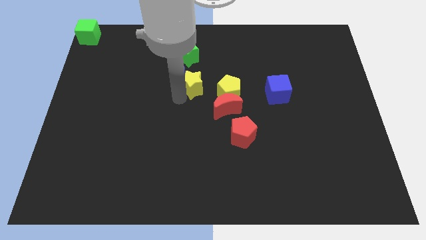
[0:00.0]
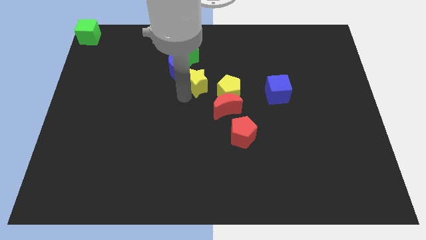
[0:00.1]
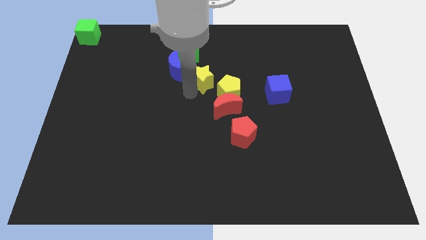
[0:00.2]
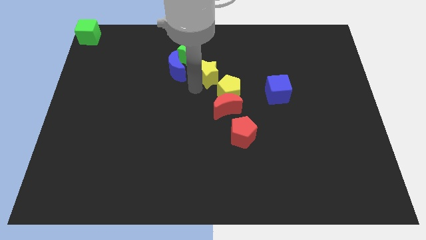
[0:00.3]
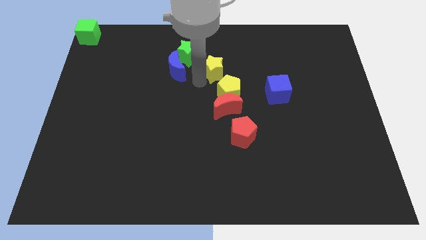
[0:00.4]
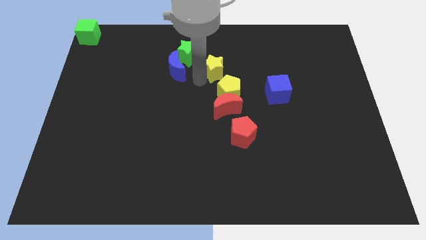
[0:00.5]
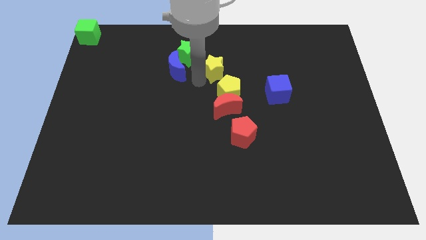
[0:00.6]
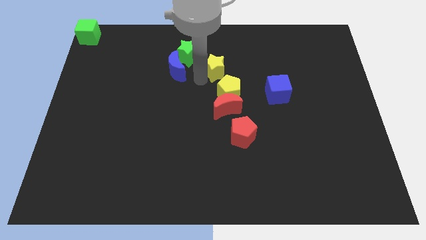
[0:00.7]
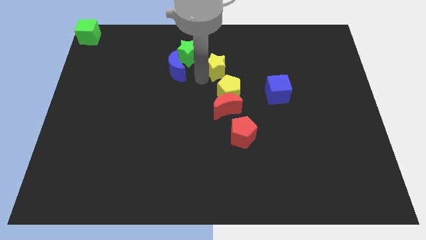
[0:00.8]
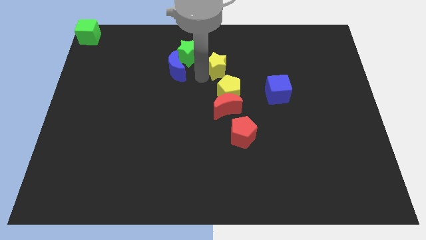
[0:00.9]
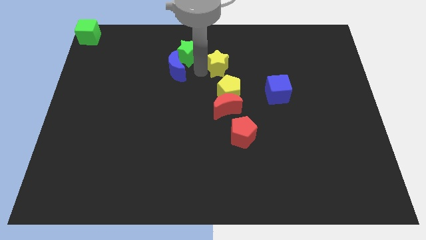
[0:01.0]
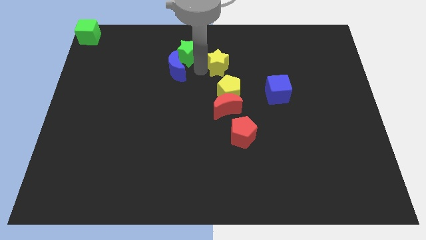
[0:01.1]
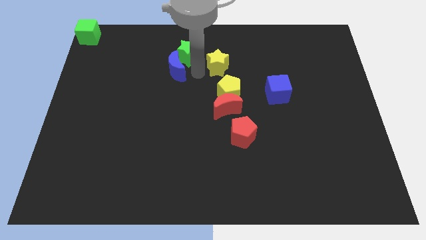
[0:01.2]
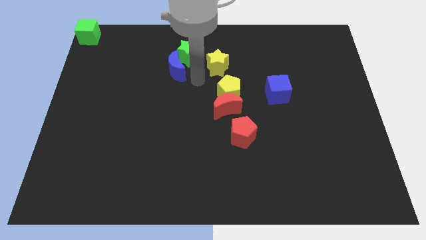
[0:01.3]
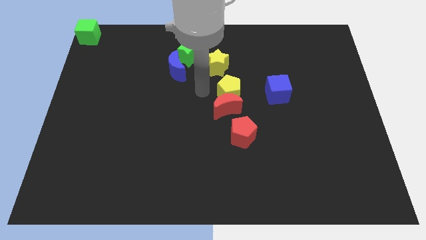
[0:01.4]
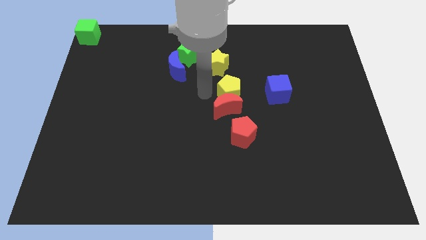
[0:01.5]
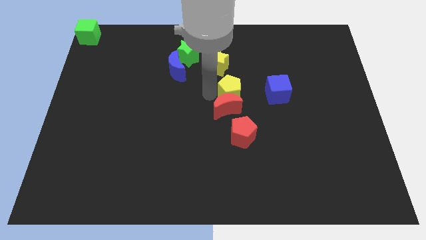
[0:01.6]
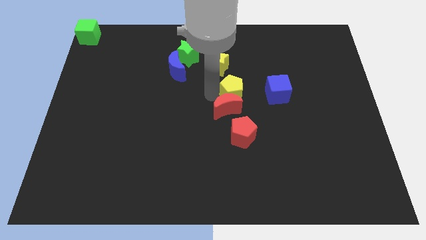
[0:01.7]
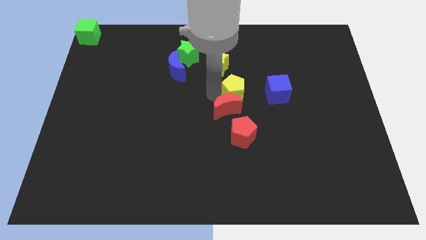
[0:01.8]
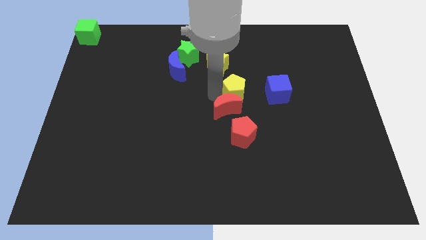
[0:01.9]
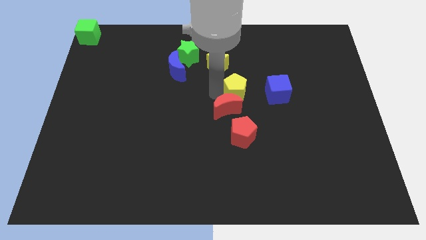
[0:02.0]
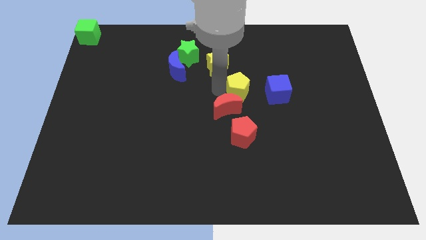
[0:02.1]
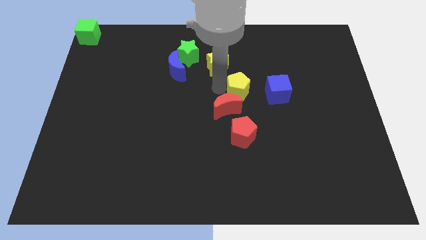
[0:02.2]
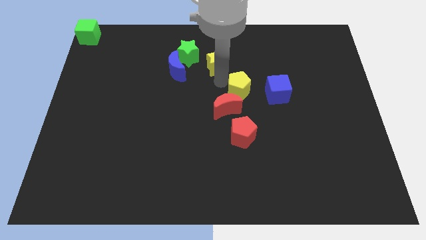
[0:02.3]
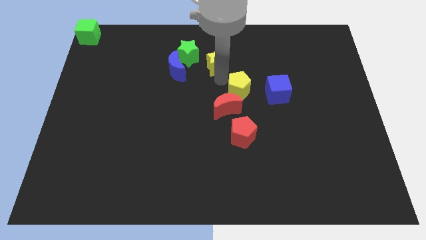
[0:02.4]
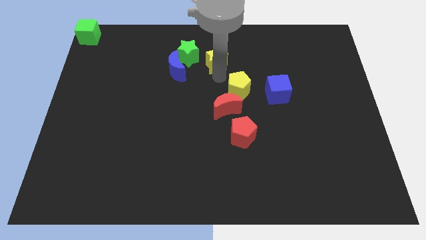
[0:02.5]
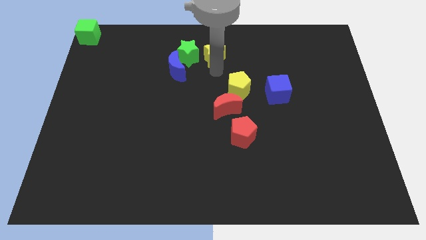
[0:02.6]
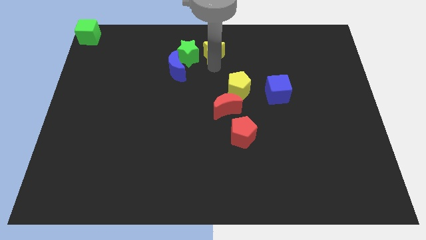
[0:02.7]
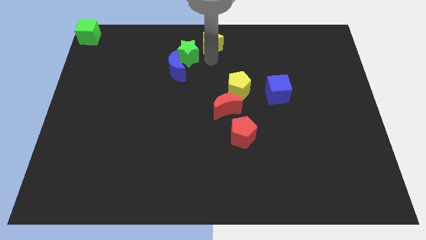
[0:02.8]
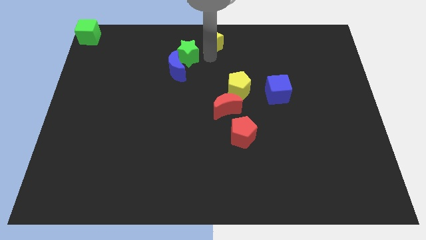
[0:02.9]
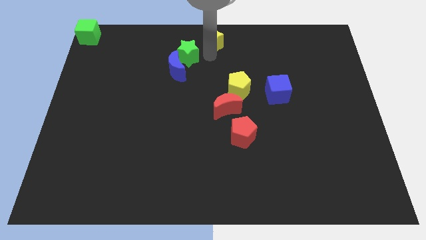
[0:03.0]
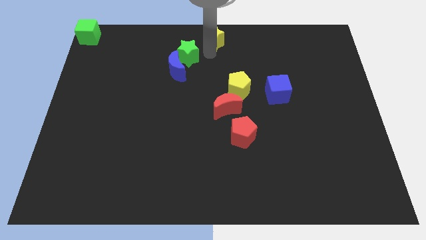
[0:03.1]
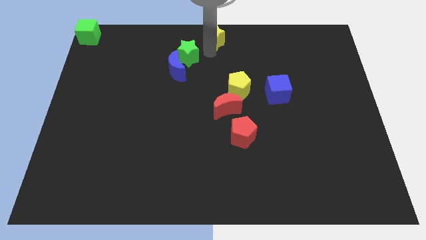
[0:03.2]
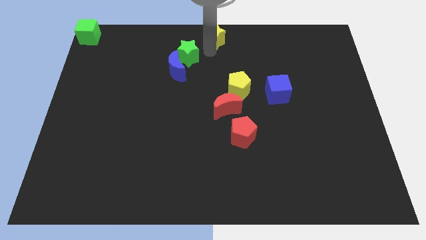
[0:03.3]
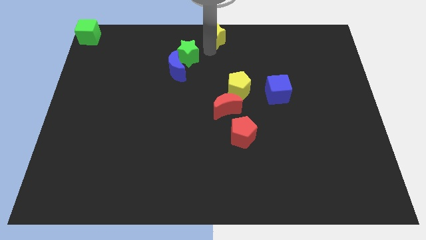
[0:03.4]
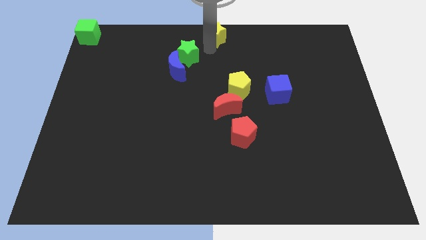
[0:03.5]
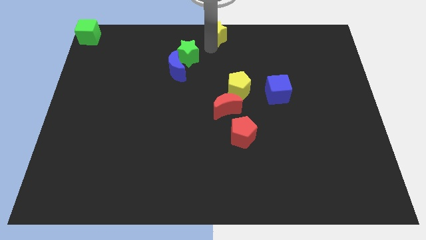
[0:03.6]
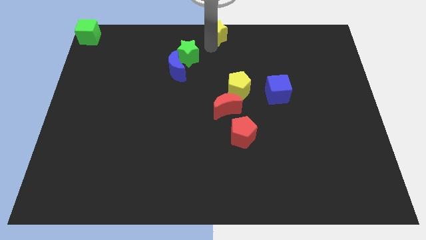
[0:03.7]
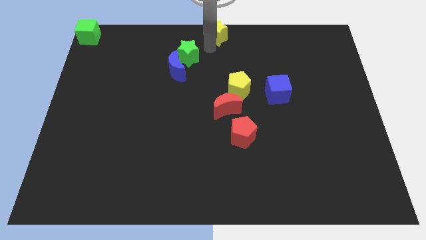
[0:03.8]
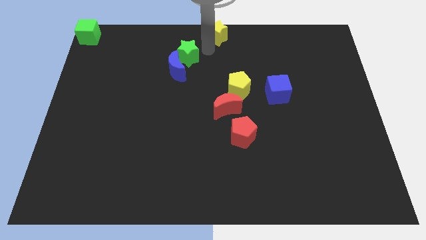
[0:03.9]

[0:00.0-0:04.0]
push yellow star to the top middle of the board

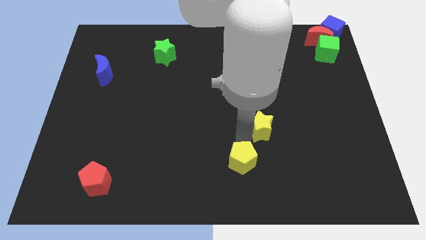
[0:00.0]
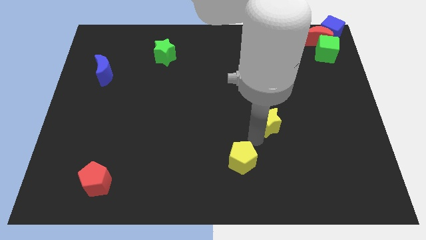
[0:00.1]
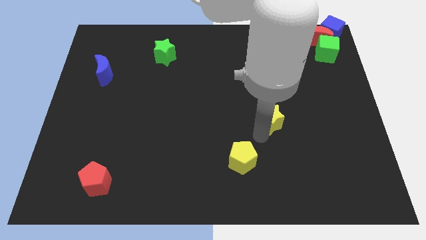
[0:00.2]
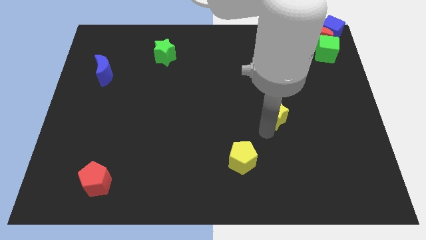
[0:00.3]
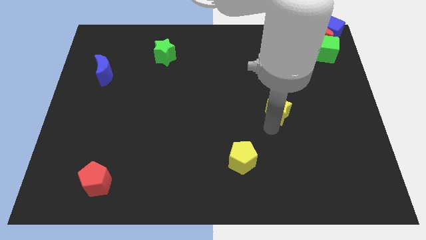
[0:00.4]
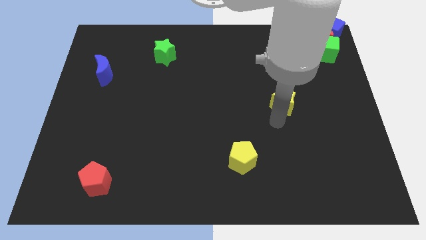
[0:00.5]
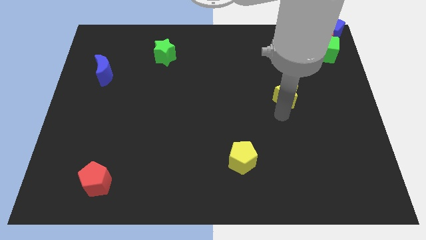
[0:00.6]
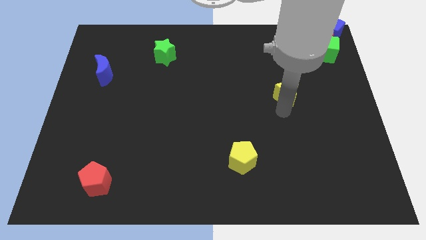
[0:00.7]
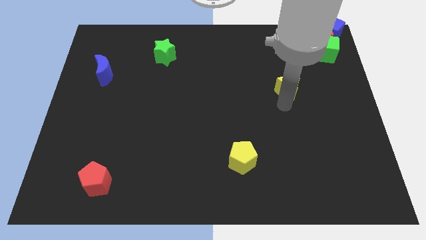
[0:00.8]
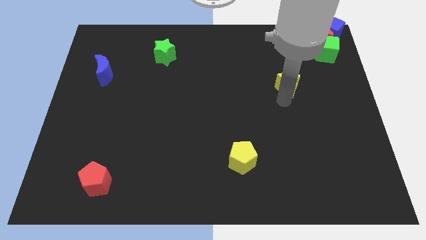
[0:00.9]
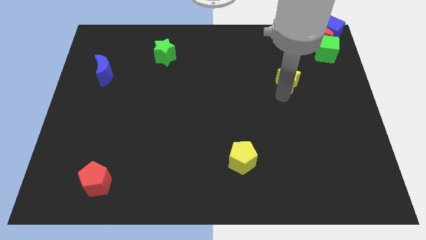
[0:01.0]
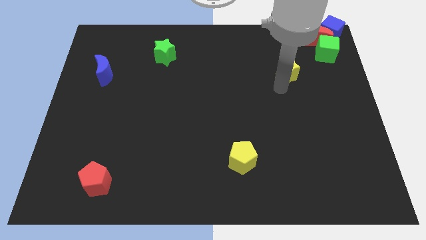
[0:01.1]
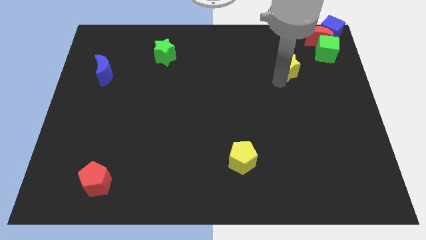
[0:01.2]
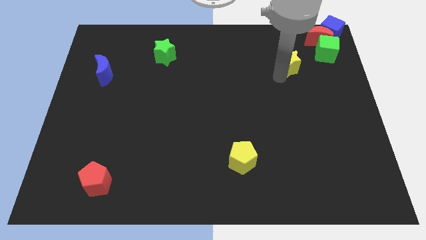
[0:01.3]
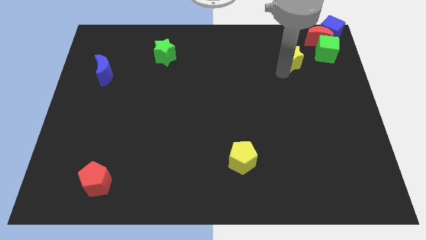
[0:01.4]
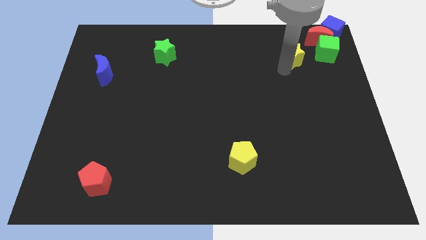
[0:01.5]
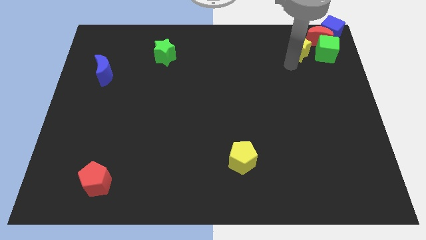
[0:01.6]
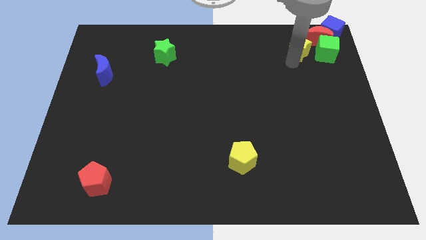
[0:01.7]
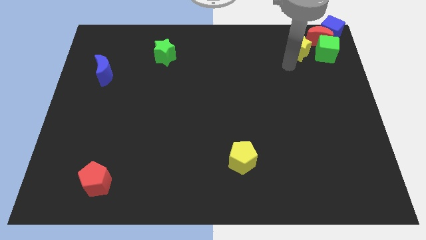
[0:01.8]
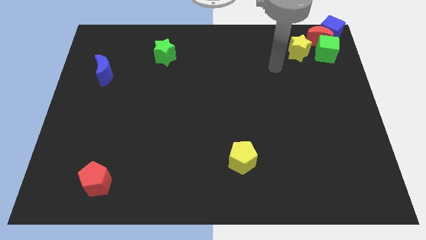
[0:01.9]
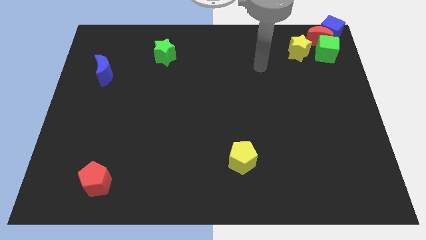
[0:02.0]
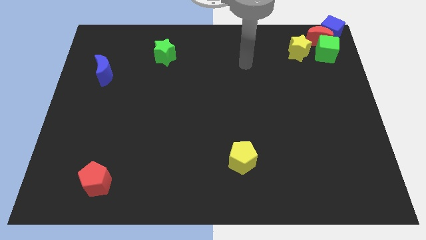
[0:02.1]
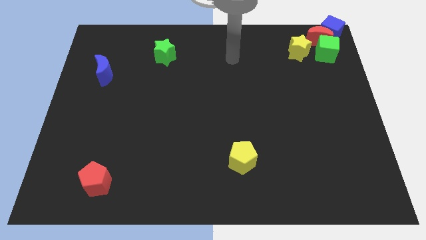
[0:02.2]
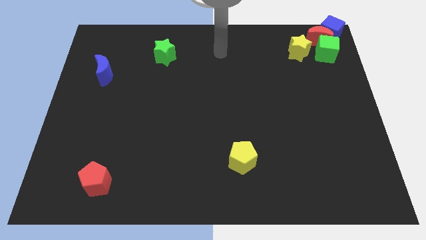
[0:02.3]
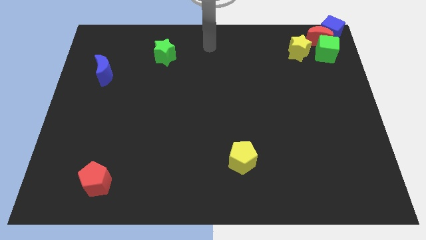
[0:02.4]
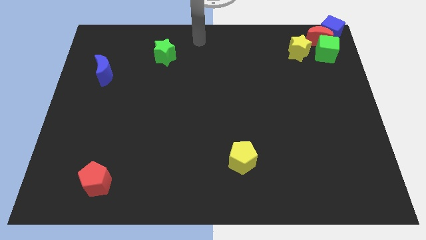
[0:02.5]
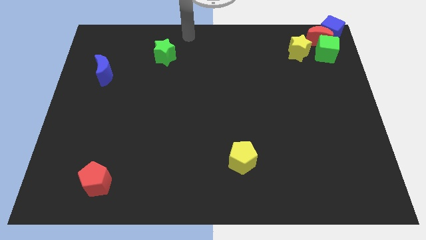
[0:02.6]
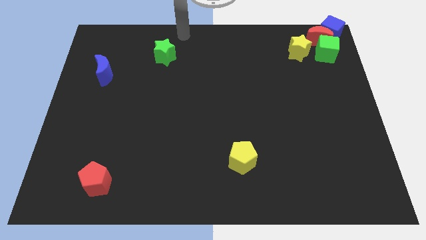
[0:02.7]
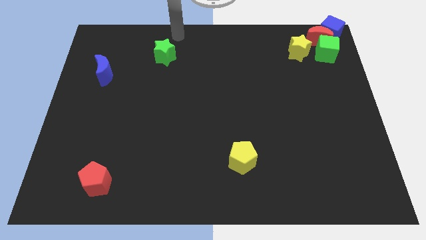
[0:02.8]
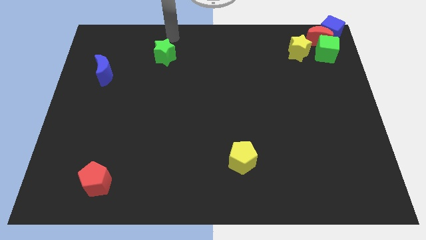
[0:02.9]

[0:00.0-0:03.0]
drag the yellow star and place it close to the red moon

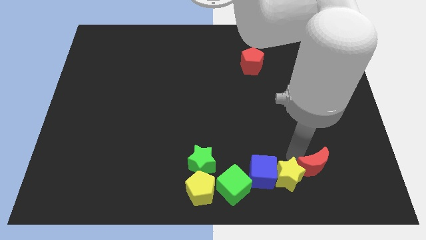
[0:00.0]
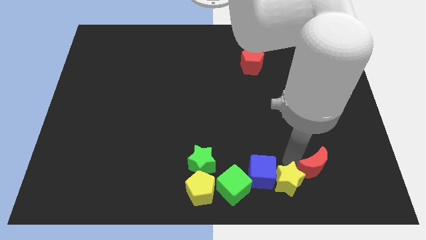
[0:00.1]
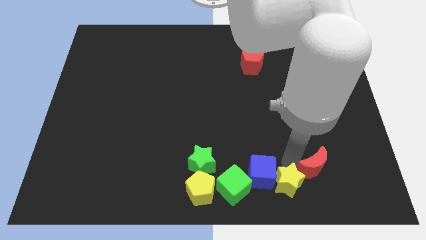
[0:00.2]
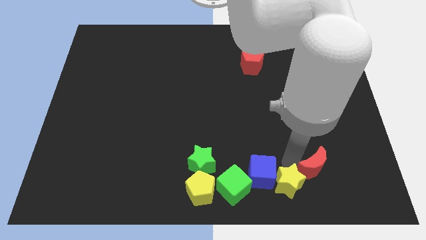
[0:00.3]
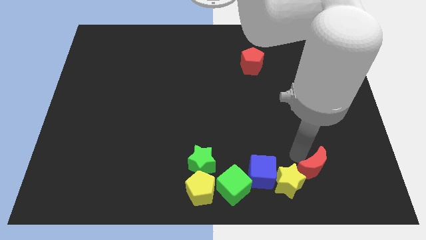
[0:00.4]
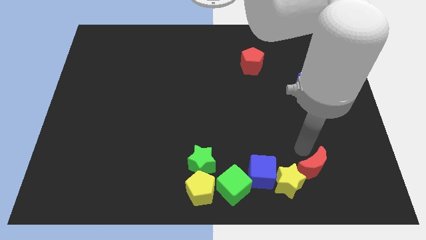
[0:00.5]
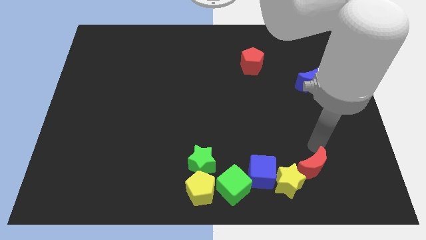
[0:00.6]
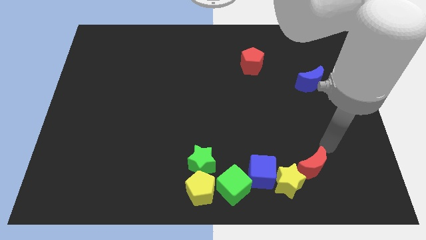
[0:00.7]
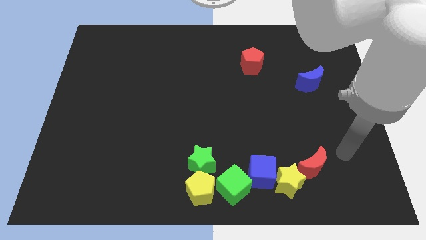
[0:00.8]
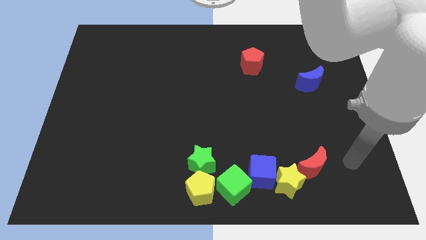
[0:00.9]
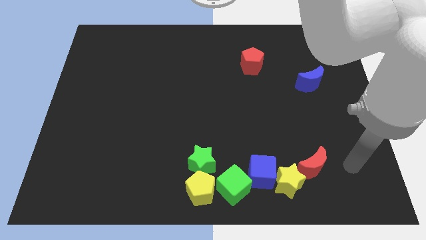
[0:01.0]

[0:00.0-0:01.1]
slightly push the yellow star towards bottom of the board

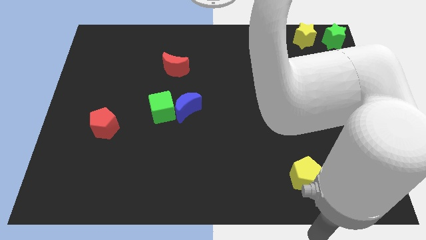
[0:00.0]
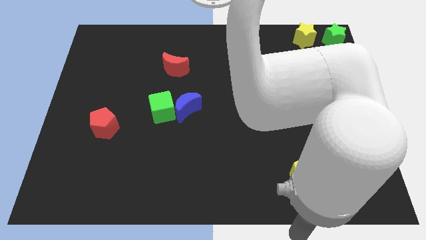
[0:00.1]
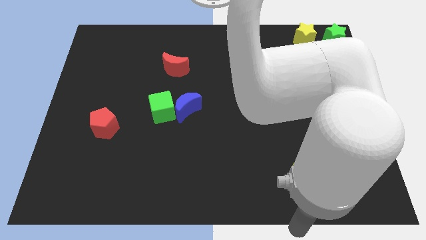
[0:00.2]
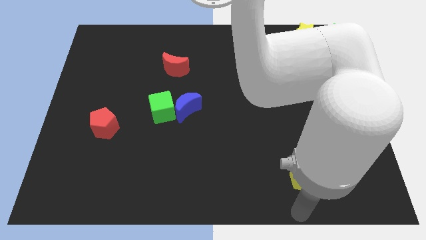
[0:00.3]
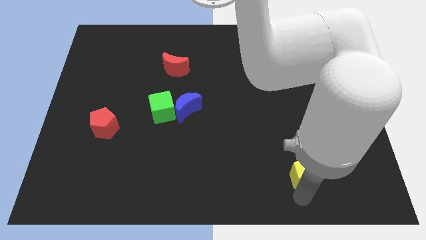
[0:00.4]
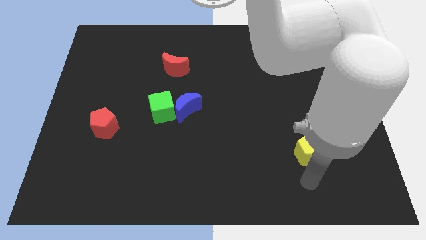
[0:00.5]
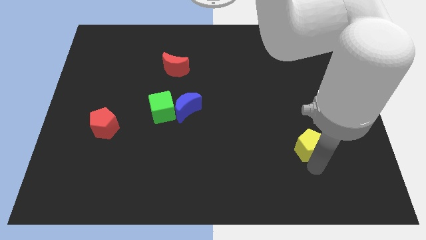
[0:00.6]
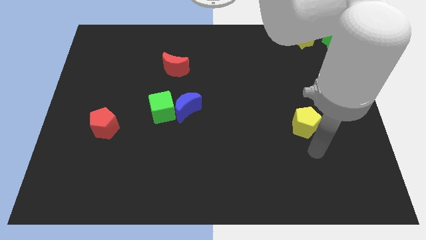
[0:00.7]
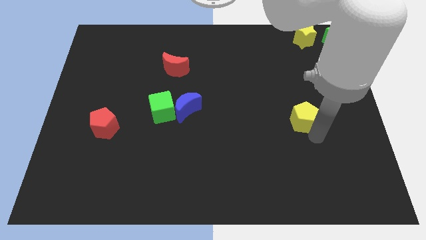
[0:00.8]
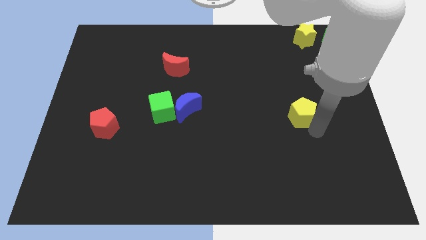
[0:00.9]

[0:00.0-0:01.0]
push yellow pentagon slightly up
